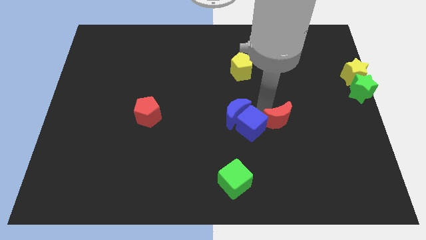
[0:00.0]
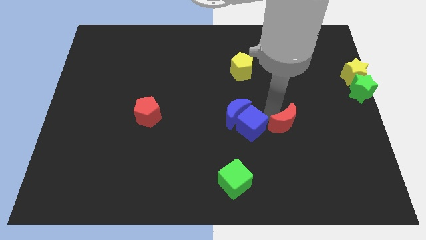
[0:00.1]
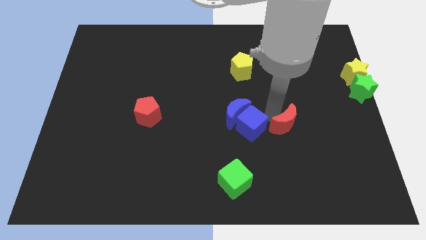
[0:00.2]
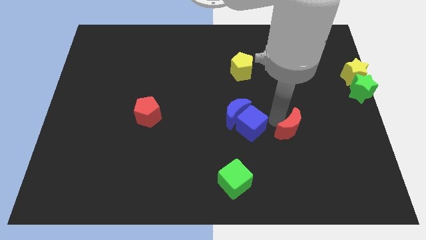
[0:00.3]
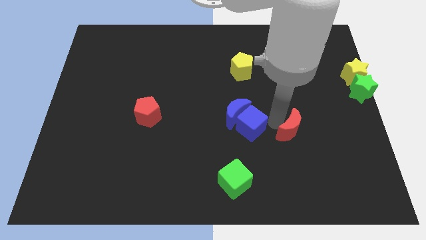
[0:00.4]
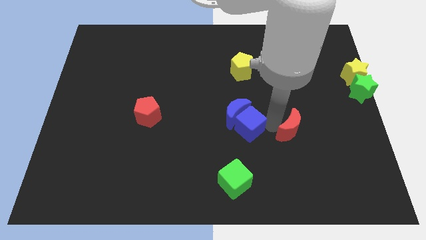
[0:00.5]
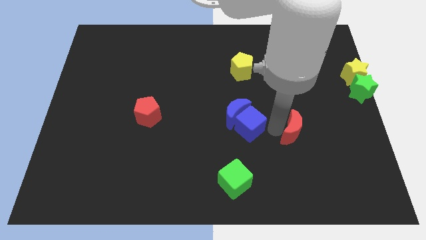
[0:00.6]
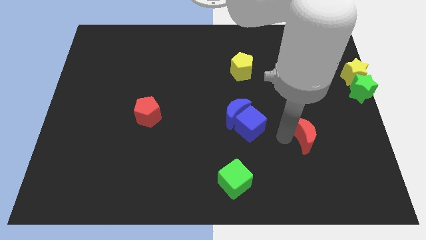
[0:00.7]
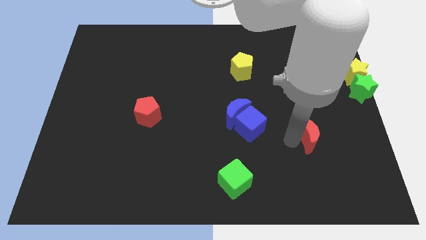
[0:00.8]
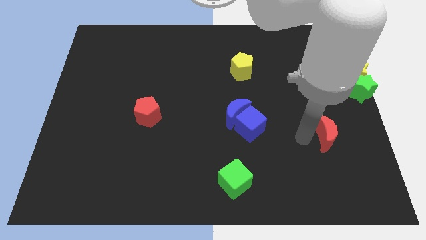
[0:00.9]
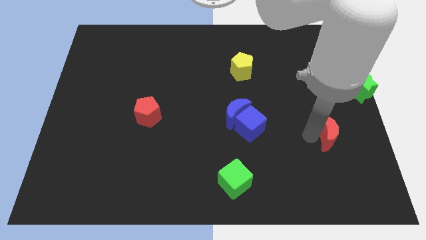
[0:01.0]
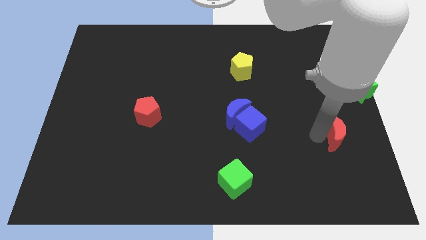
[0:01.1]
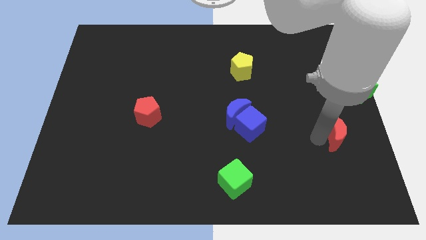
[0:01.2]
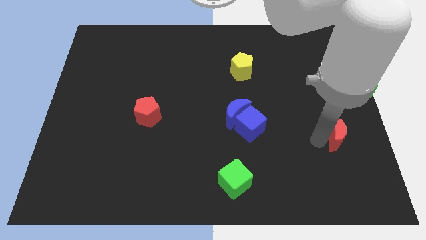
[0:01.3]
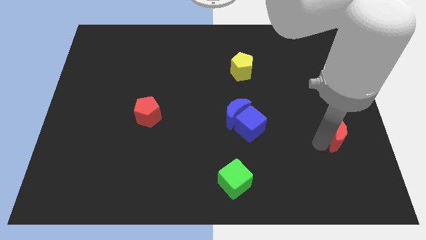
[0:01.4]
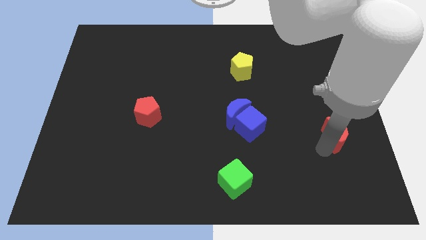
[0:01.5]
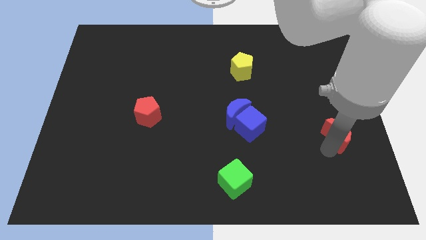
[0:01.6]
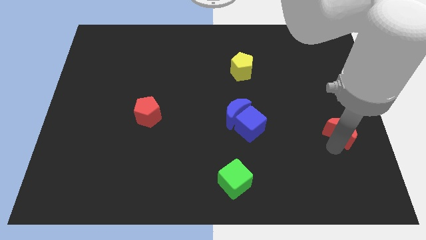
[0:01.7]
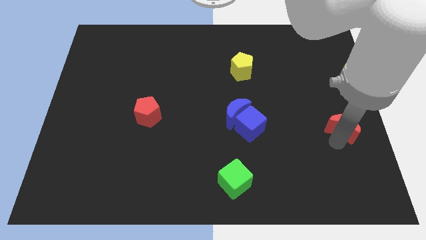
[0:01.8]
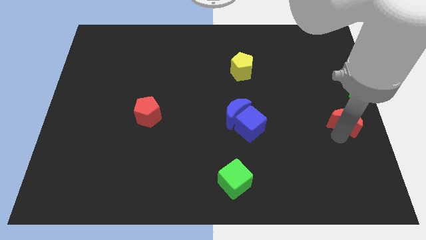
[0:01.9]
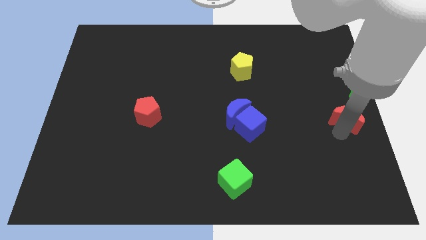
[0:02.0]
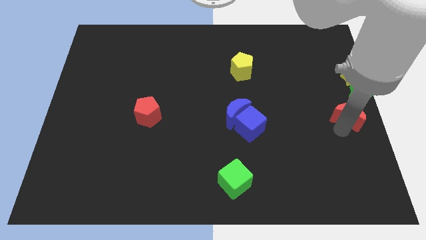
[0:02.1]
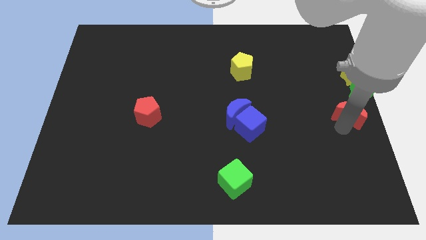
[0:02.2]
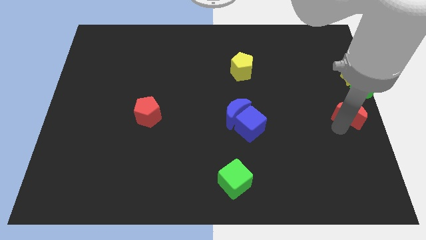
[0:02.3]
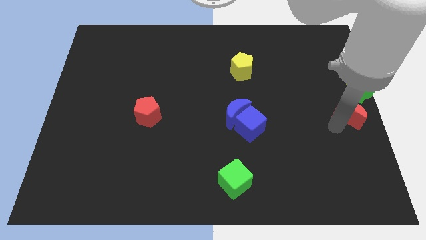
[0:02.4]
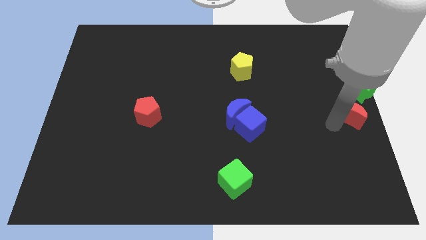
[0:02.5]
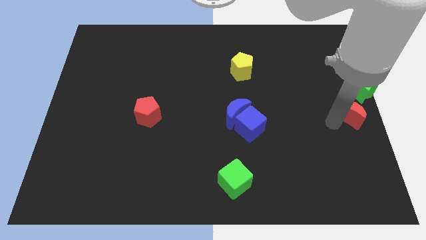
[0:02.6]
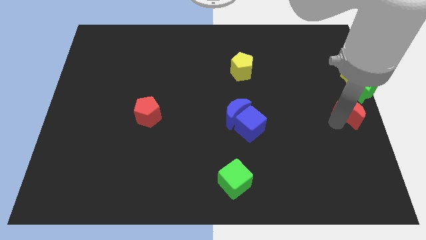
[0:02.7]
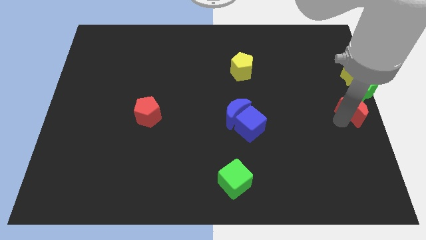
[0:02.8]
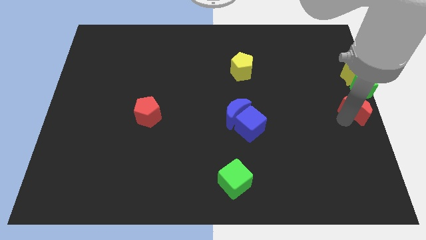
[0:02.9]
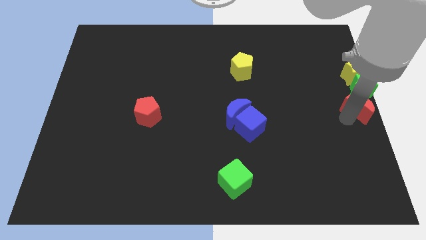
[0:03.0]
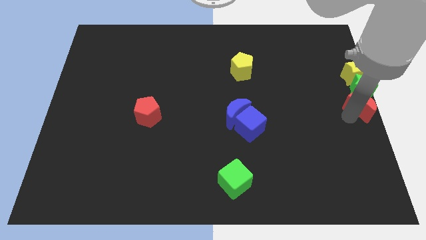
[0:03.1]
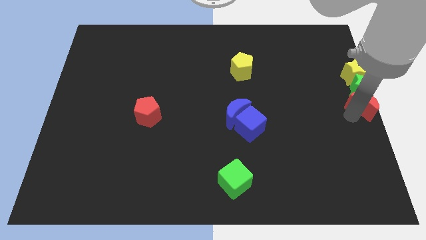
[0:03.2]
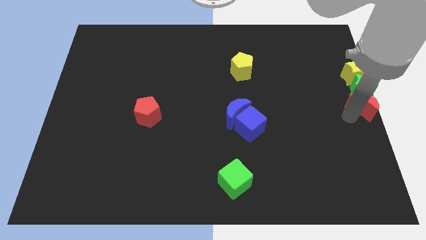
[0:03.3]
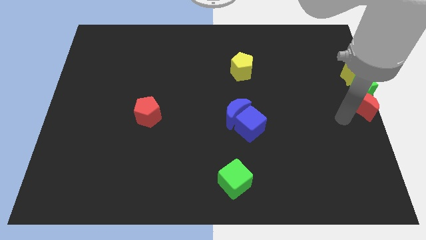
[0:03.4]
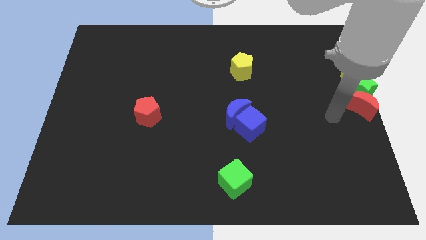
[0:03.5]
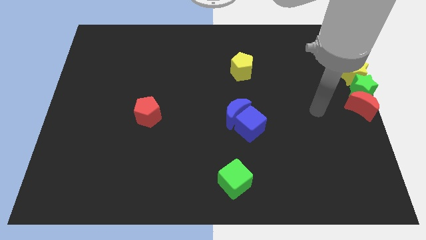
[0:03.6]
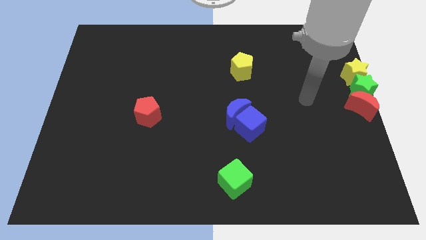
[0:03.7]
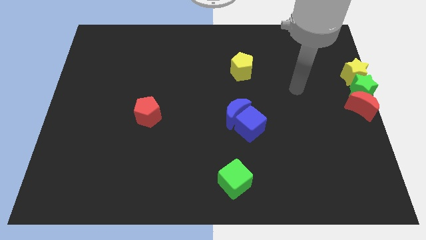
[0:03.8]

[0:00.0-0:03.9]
place red crescent down to the green star

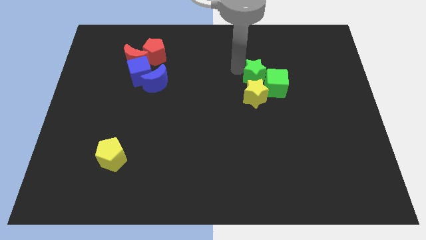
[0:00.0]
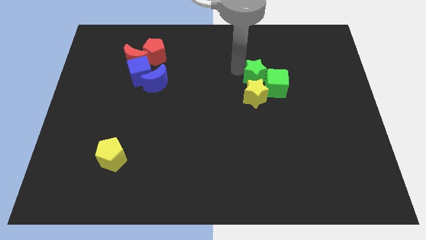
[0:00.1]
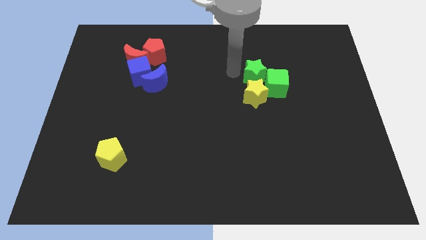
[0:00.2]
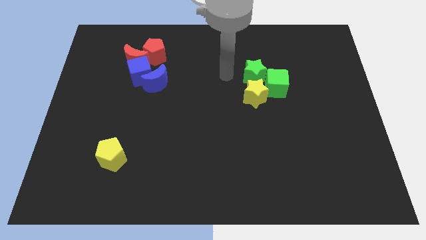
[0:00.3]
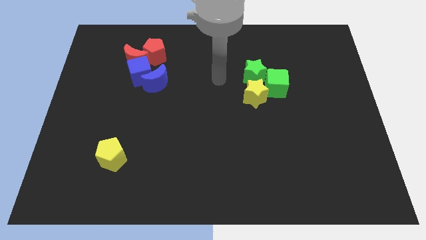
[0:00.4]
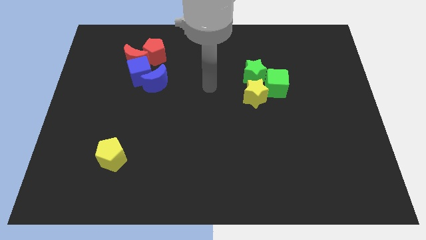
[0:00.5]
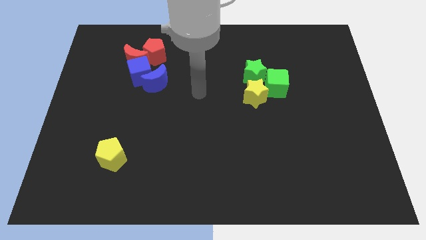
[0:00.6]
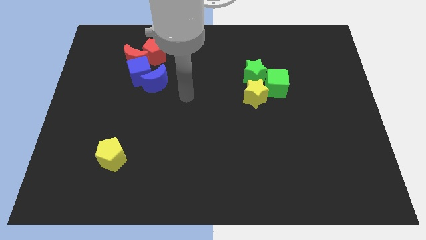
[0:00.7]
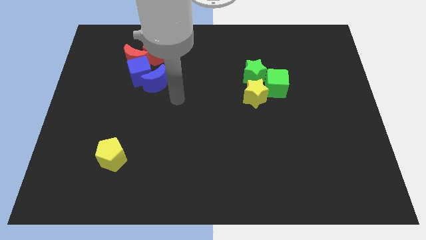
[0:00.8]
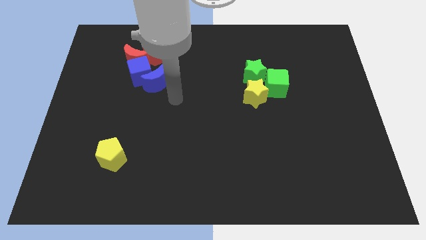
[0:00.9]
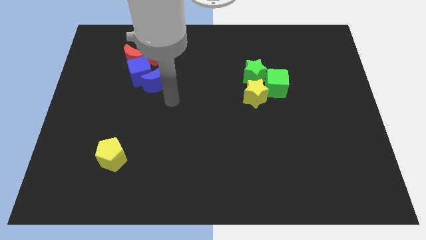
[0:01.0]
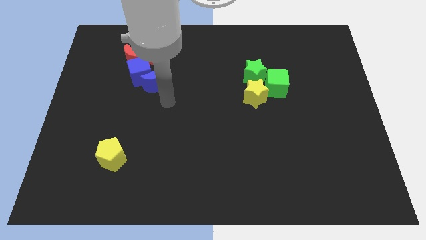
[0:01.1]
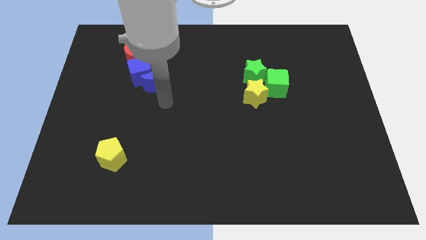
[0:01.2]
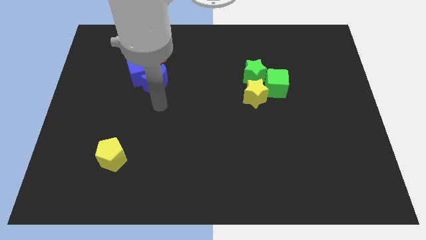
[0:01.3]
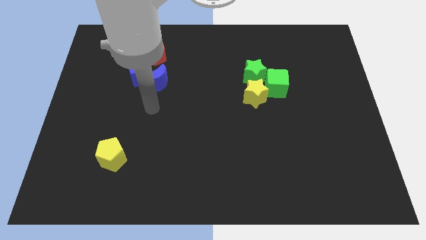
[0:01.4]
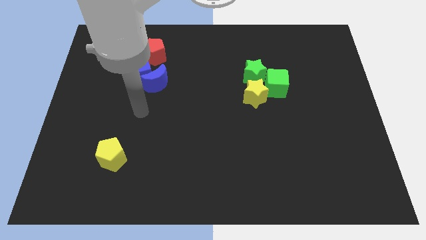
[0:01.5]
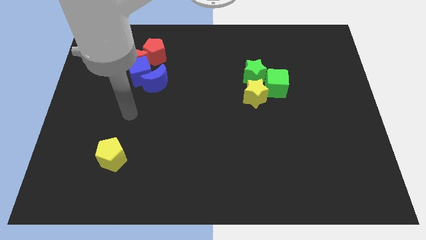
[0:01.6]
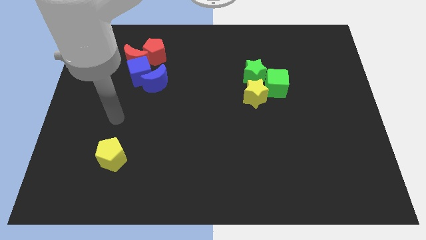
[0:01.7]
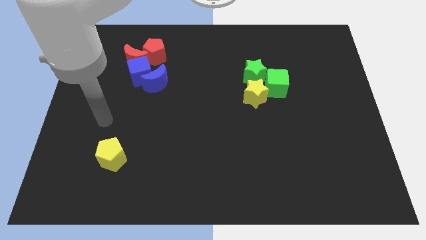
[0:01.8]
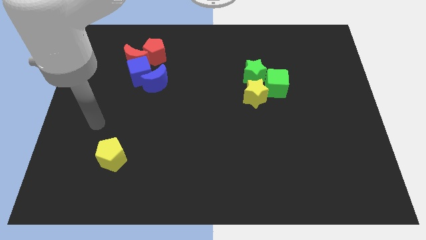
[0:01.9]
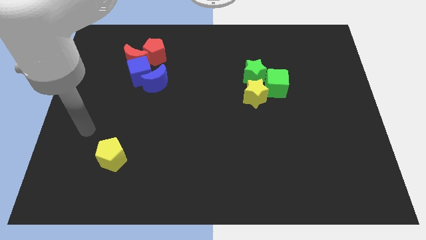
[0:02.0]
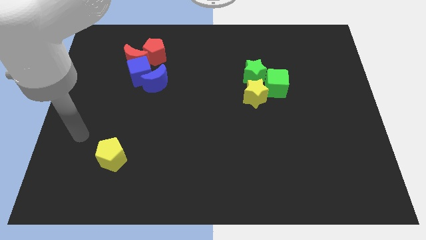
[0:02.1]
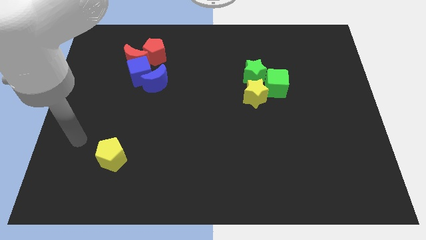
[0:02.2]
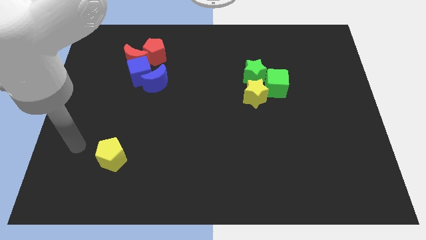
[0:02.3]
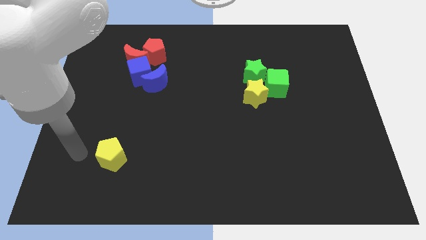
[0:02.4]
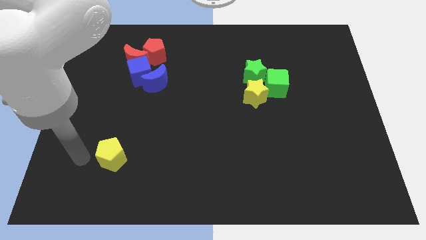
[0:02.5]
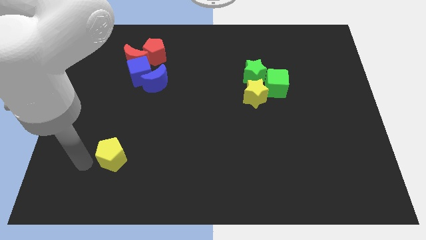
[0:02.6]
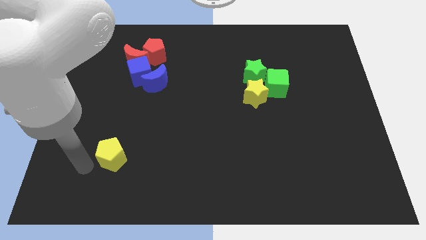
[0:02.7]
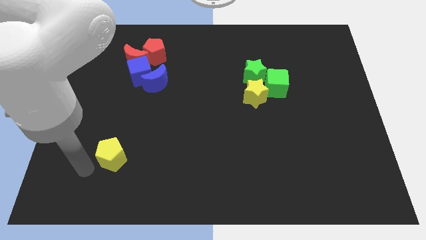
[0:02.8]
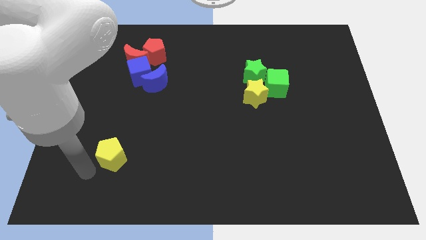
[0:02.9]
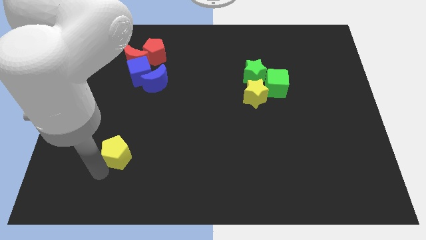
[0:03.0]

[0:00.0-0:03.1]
drag the arm near the yellow pentagon

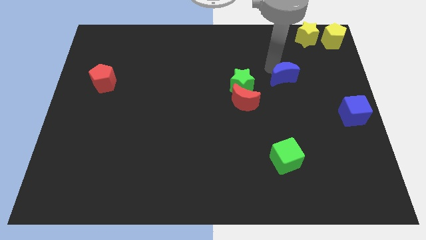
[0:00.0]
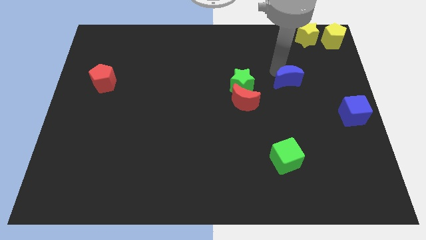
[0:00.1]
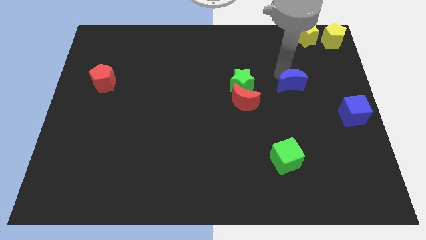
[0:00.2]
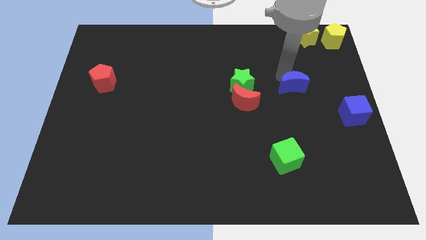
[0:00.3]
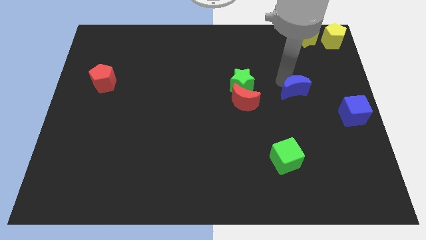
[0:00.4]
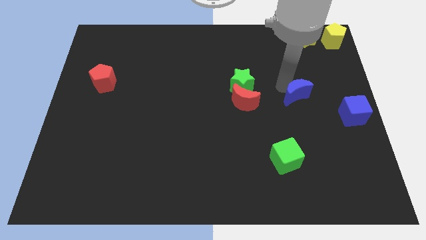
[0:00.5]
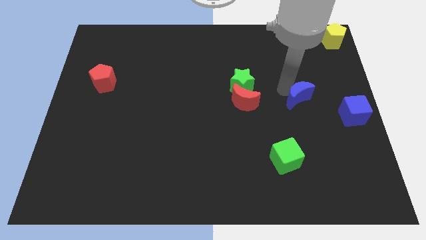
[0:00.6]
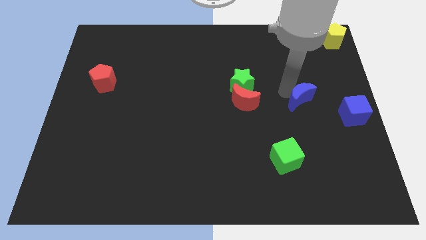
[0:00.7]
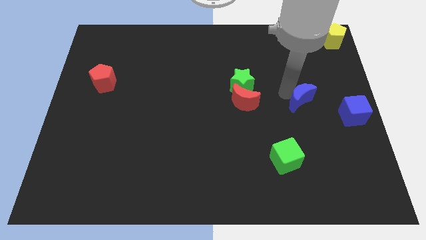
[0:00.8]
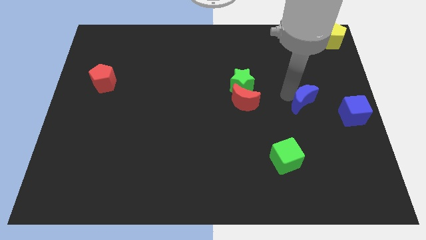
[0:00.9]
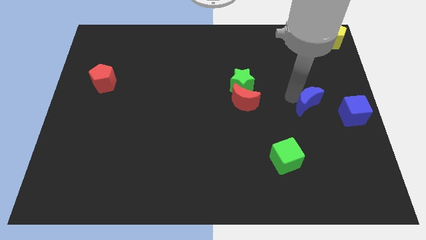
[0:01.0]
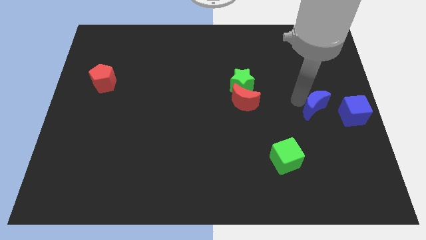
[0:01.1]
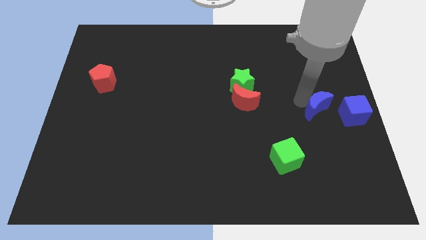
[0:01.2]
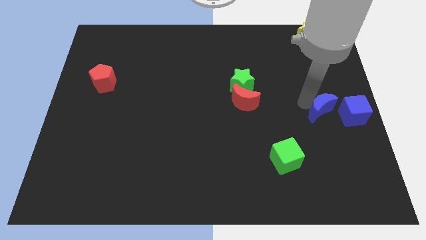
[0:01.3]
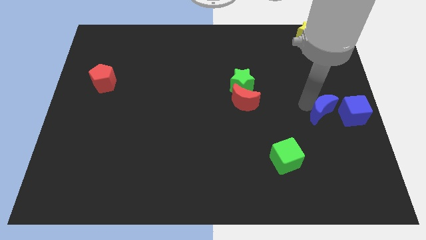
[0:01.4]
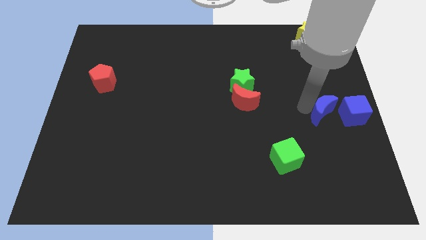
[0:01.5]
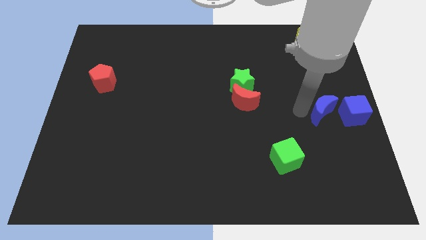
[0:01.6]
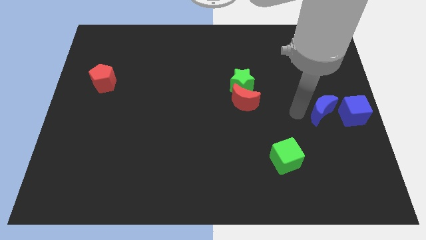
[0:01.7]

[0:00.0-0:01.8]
place the blue crescent to the left side of the blue cube

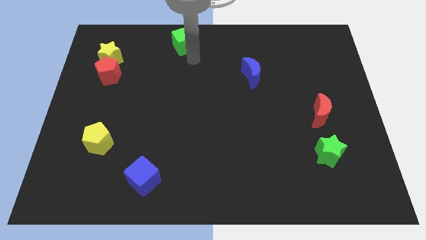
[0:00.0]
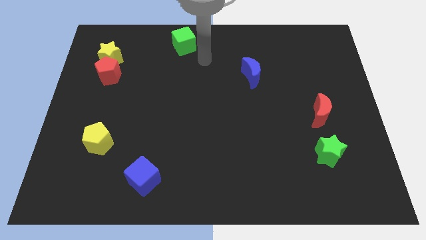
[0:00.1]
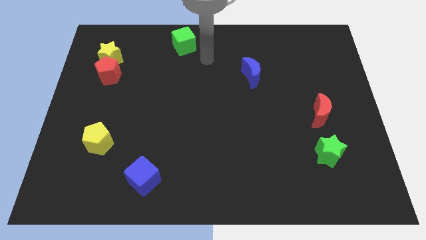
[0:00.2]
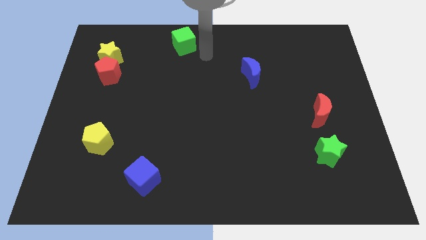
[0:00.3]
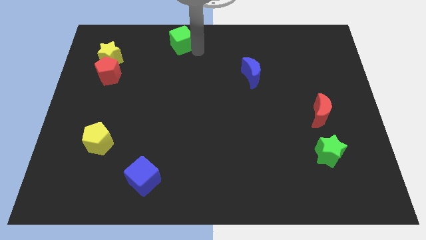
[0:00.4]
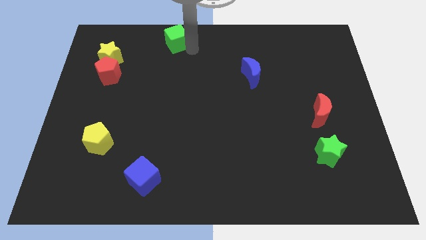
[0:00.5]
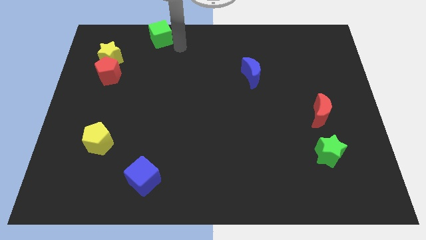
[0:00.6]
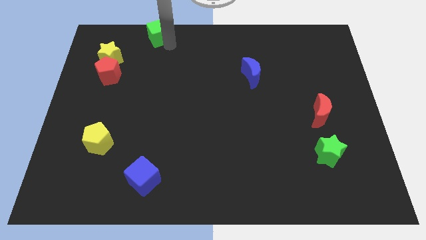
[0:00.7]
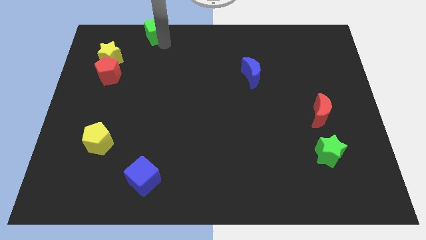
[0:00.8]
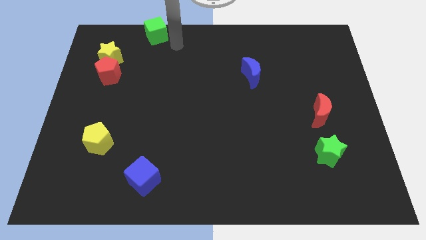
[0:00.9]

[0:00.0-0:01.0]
move the green cube to the top left of board
